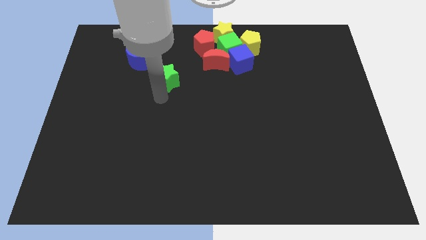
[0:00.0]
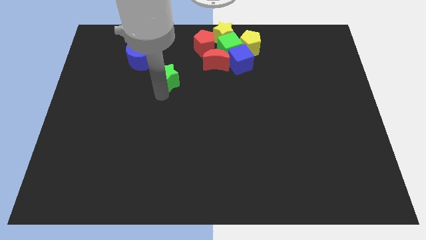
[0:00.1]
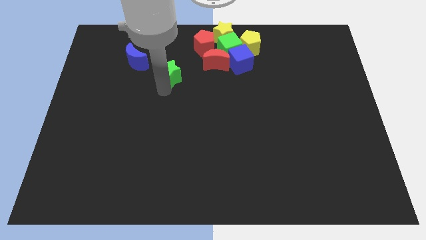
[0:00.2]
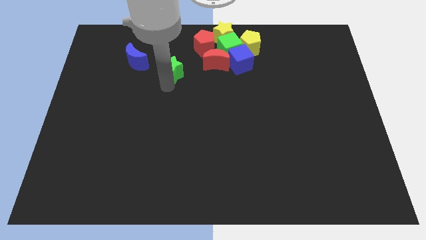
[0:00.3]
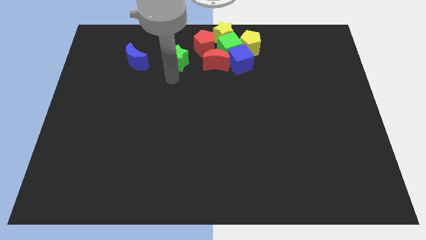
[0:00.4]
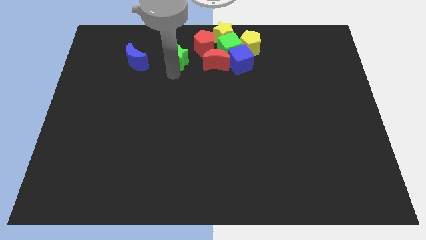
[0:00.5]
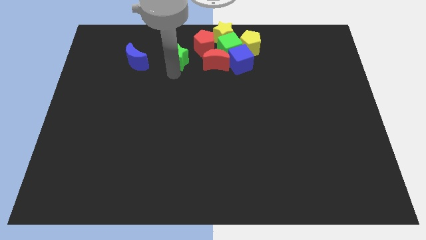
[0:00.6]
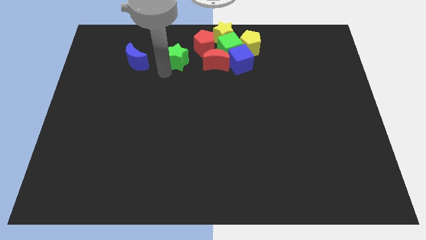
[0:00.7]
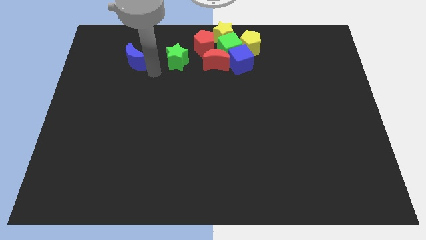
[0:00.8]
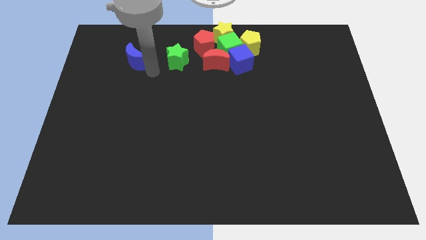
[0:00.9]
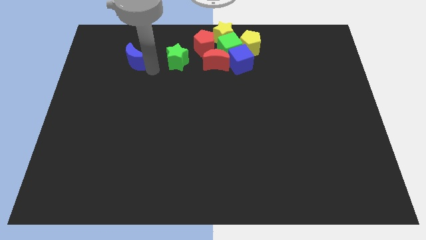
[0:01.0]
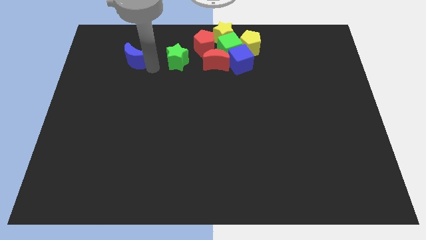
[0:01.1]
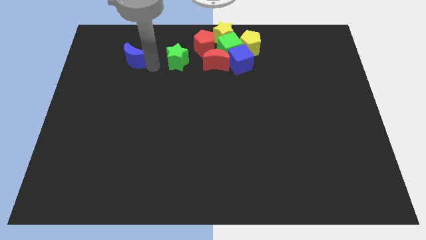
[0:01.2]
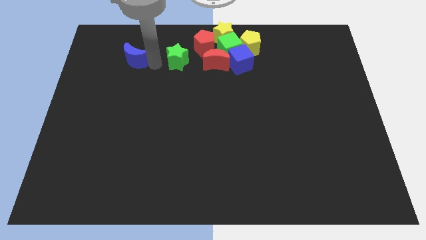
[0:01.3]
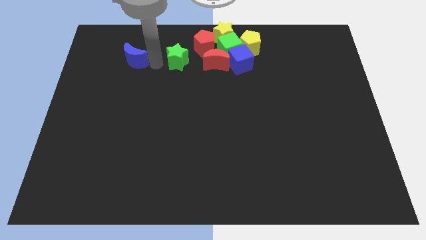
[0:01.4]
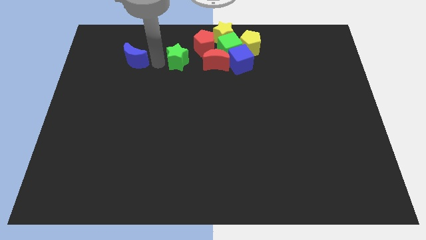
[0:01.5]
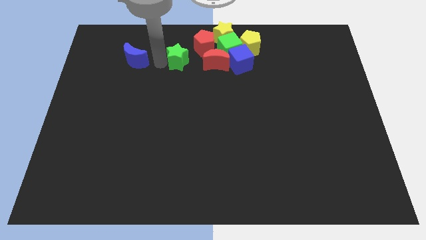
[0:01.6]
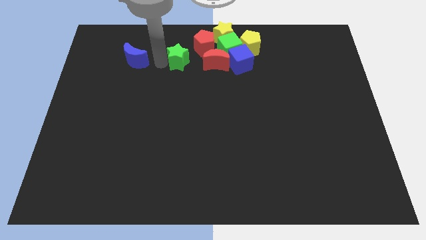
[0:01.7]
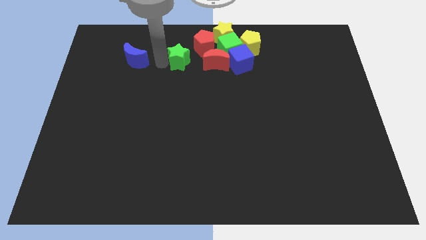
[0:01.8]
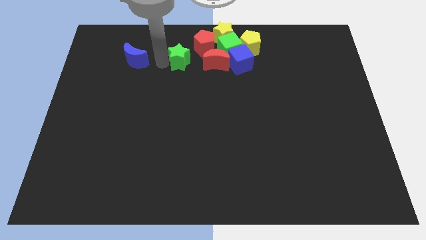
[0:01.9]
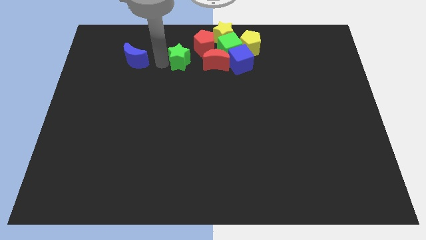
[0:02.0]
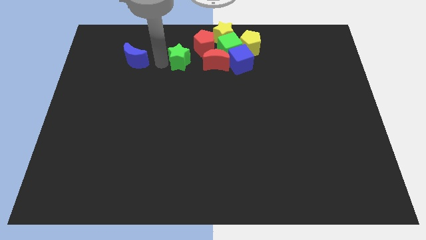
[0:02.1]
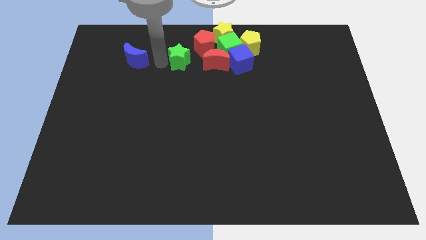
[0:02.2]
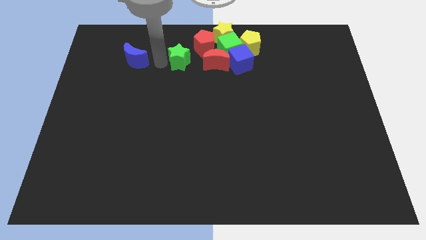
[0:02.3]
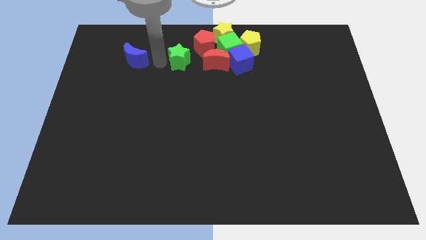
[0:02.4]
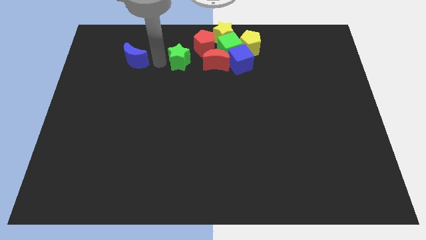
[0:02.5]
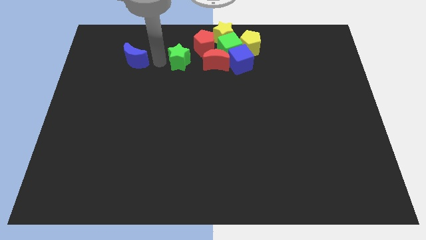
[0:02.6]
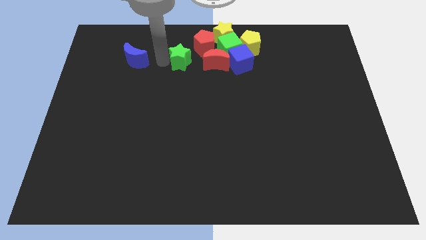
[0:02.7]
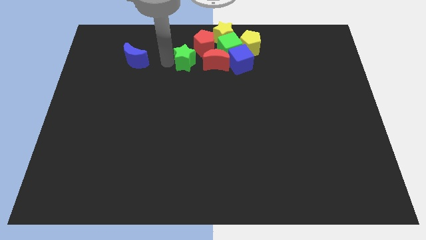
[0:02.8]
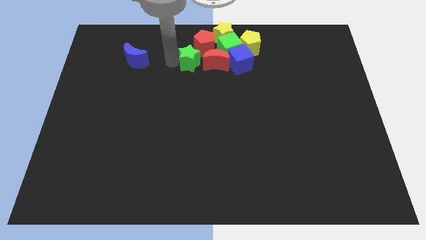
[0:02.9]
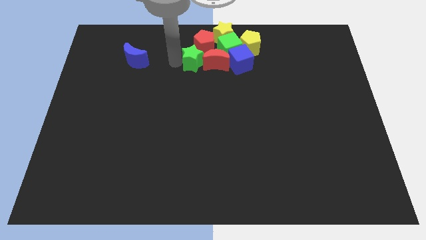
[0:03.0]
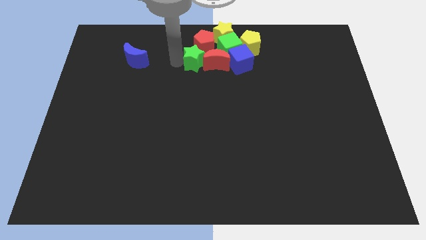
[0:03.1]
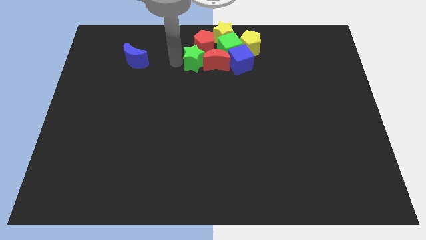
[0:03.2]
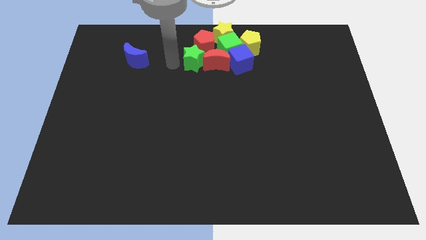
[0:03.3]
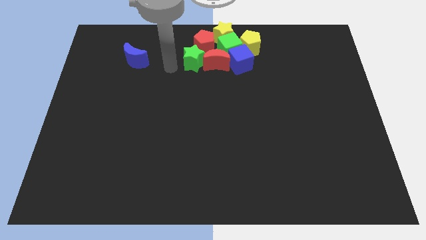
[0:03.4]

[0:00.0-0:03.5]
move the green star to the left side of the red moon

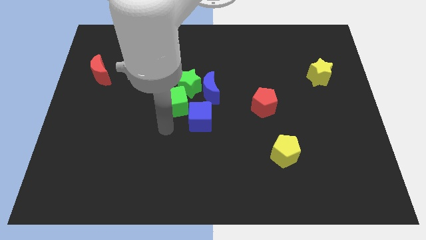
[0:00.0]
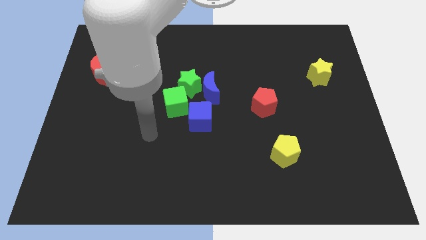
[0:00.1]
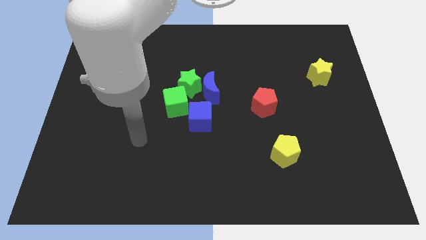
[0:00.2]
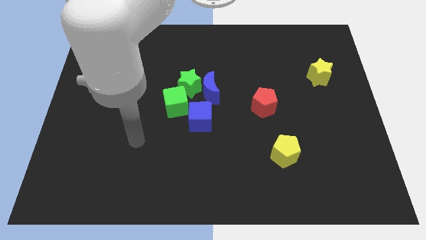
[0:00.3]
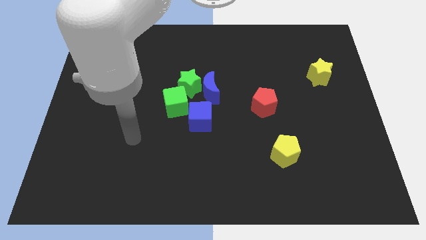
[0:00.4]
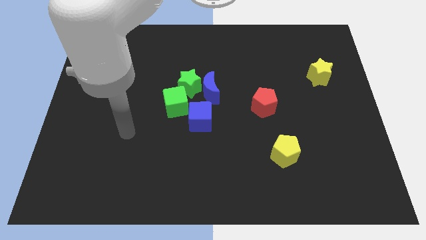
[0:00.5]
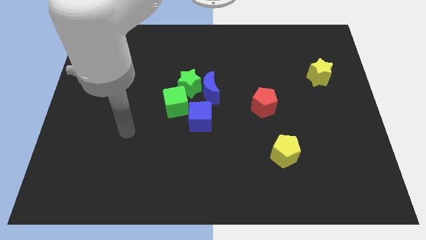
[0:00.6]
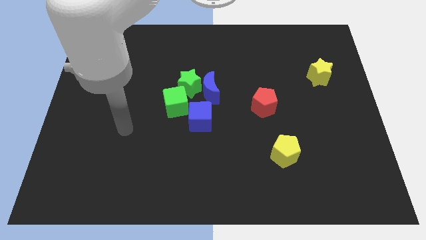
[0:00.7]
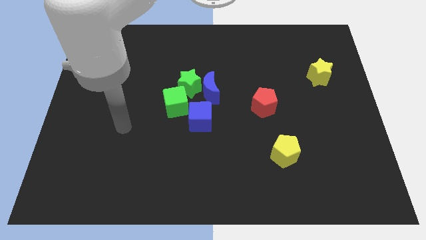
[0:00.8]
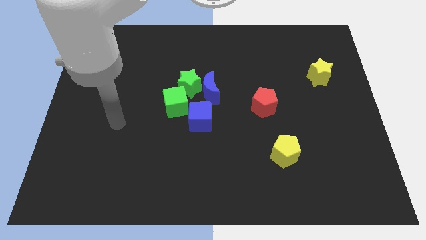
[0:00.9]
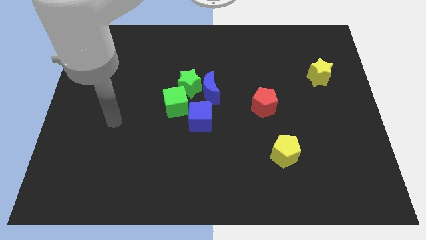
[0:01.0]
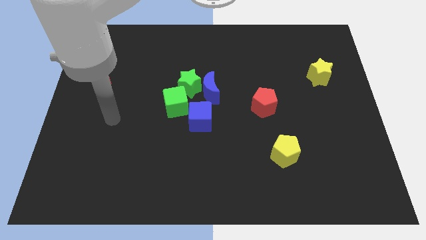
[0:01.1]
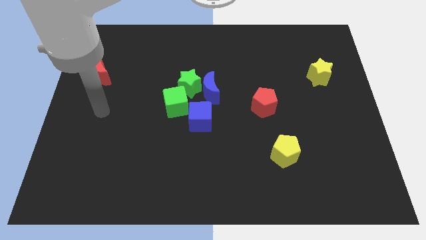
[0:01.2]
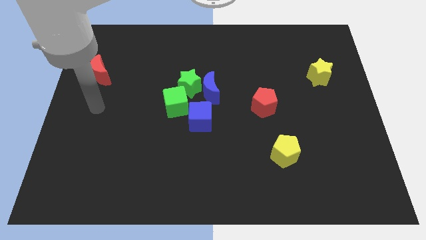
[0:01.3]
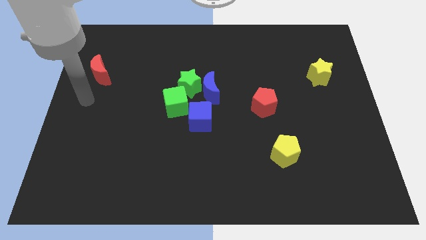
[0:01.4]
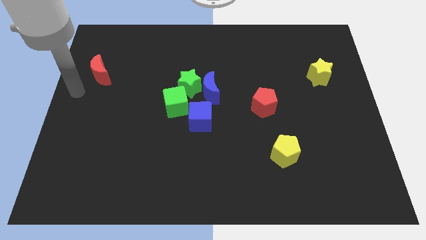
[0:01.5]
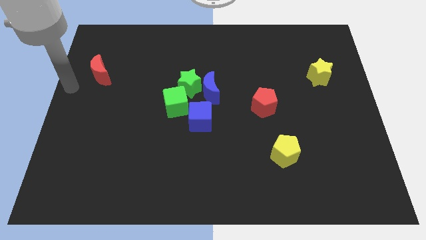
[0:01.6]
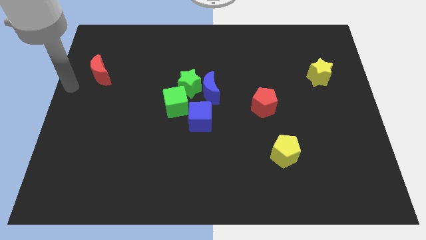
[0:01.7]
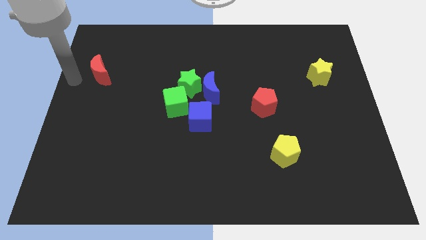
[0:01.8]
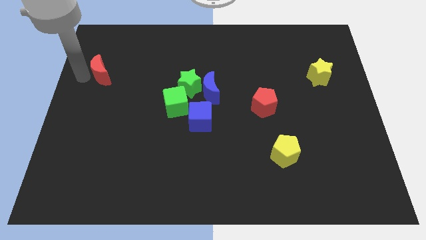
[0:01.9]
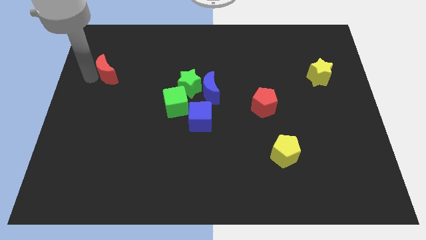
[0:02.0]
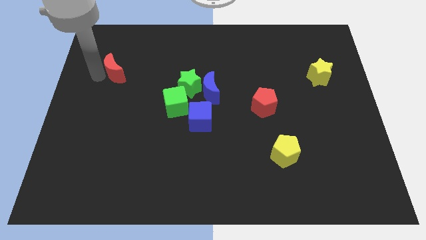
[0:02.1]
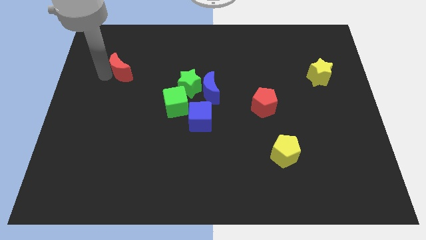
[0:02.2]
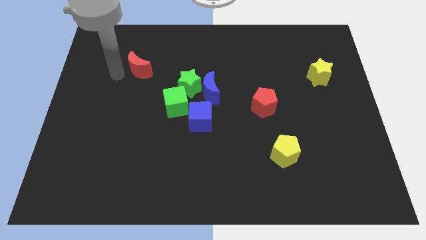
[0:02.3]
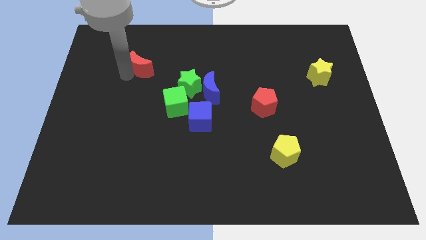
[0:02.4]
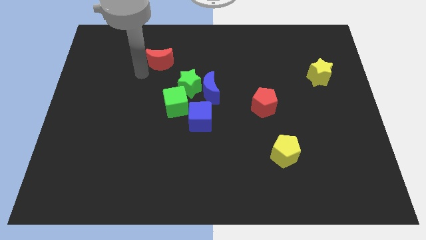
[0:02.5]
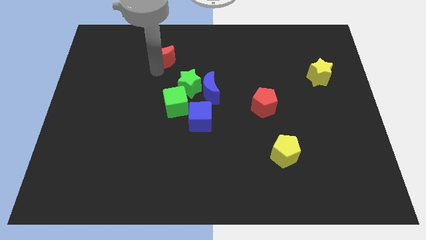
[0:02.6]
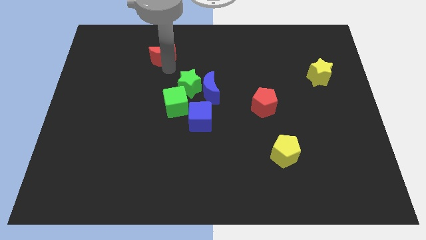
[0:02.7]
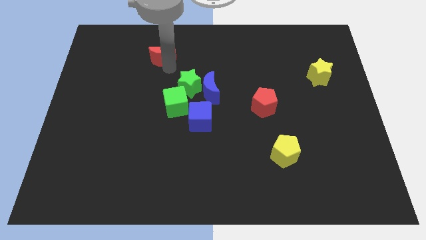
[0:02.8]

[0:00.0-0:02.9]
move the red crescent to the right side

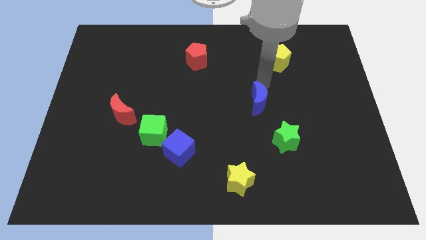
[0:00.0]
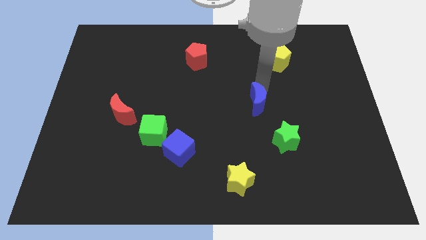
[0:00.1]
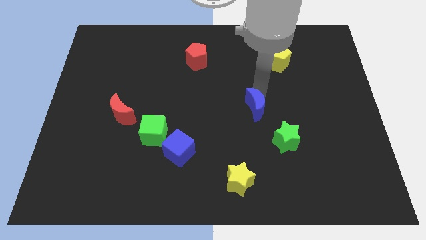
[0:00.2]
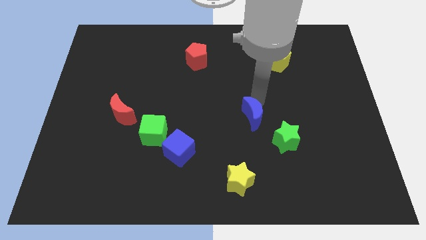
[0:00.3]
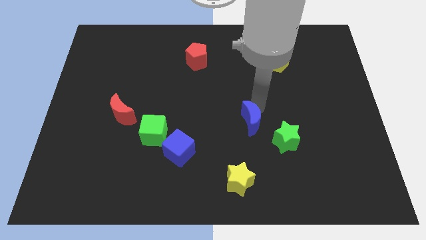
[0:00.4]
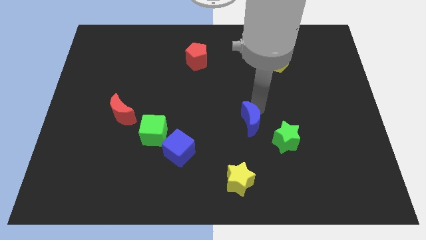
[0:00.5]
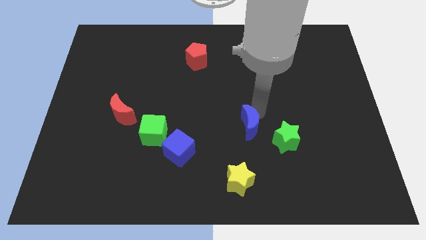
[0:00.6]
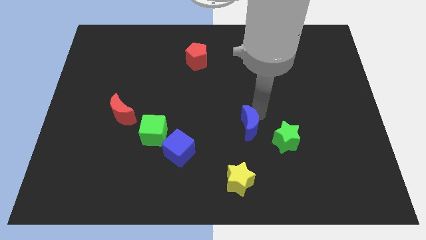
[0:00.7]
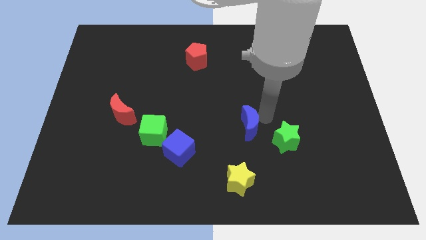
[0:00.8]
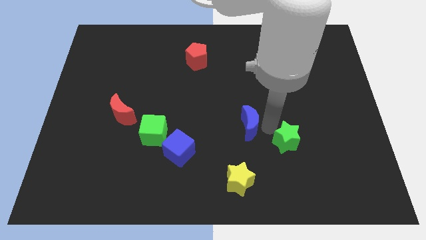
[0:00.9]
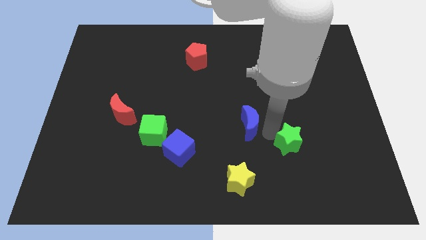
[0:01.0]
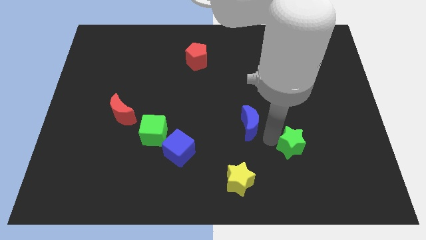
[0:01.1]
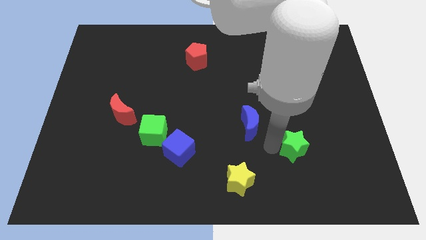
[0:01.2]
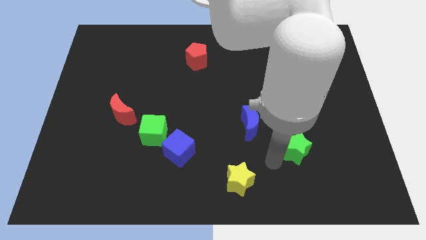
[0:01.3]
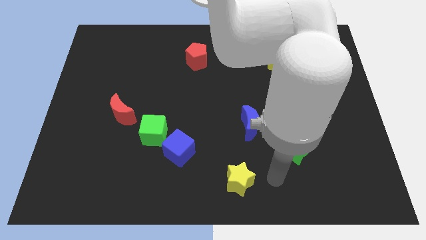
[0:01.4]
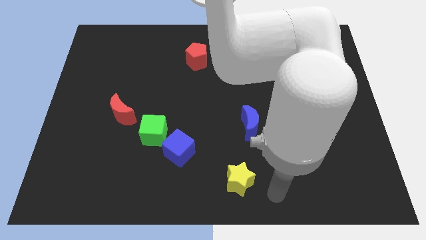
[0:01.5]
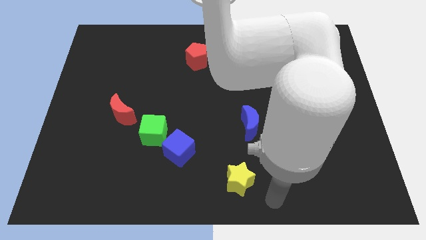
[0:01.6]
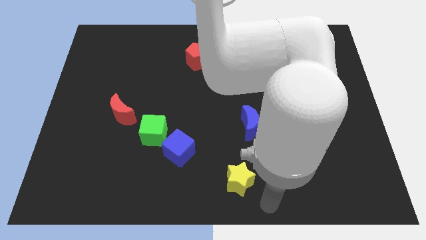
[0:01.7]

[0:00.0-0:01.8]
push the blue crescent to the top of the yellow star

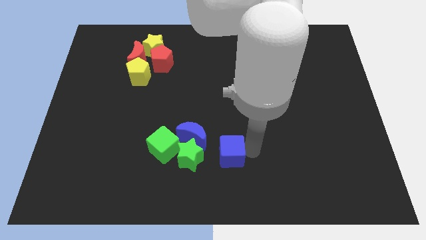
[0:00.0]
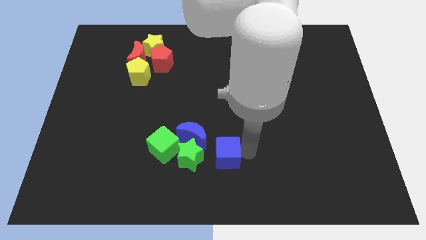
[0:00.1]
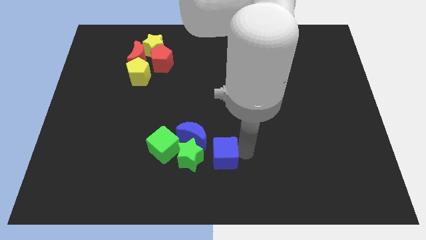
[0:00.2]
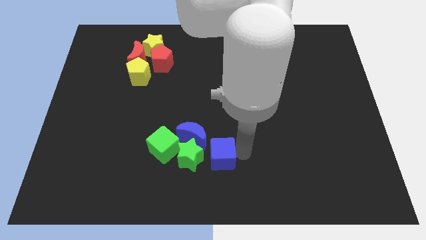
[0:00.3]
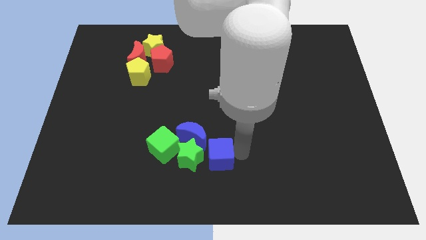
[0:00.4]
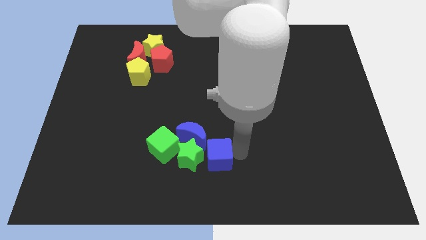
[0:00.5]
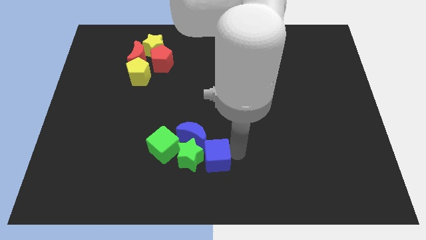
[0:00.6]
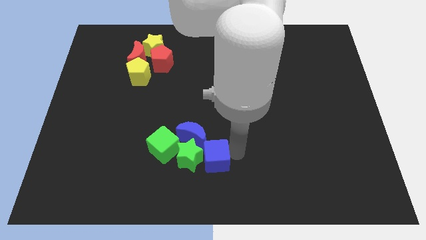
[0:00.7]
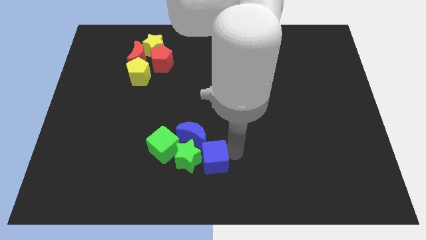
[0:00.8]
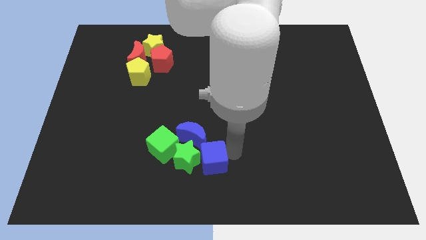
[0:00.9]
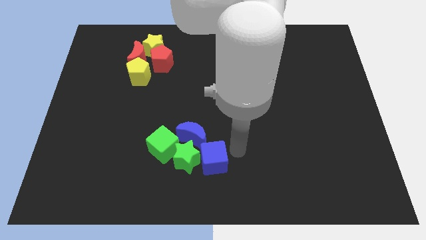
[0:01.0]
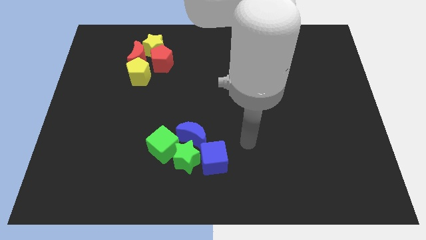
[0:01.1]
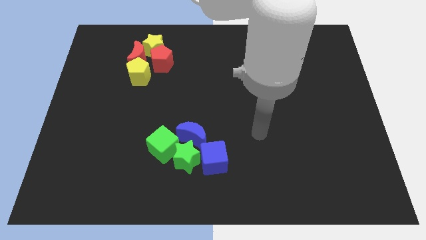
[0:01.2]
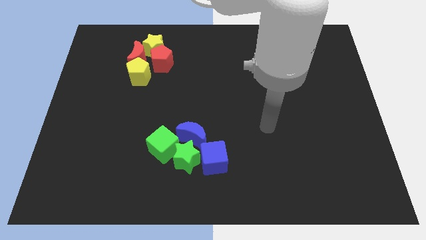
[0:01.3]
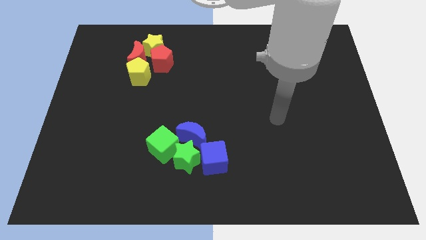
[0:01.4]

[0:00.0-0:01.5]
push the blue cube to the right of the green star
